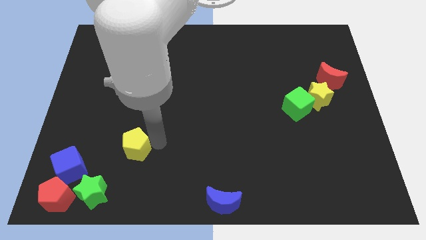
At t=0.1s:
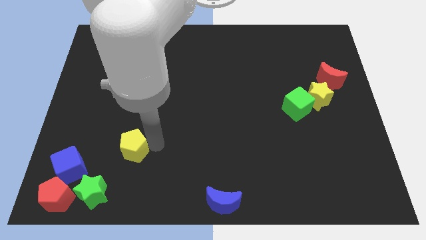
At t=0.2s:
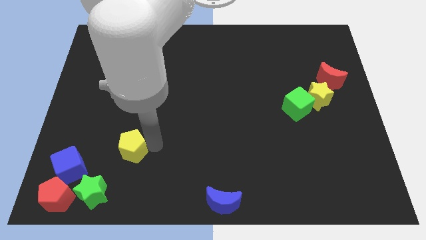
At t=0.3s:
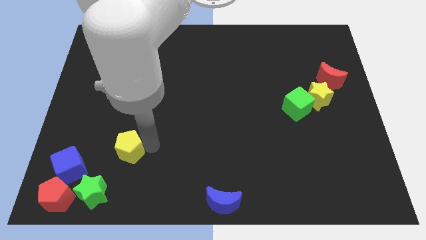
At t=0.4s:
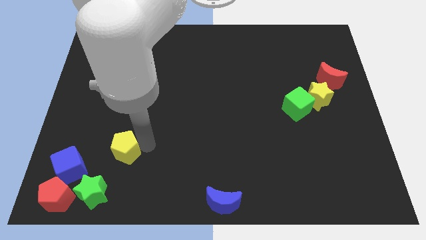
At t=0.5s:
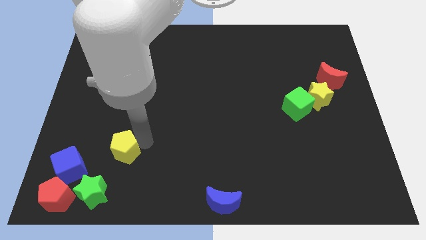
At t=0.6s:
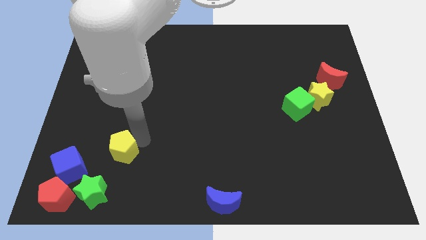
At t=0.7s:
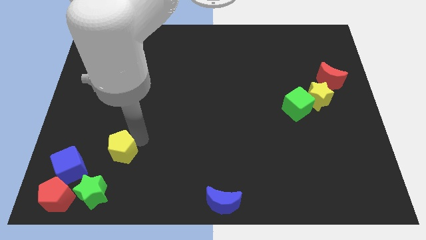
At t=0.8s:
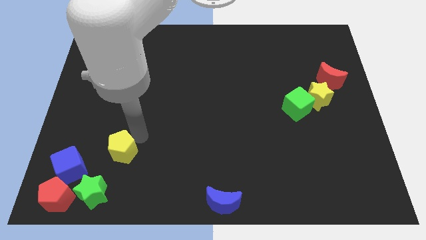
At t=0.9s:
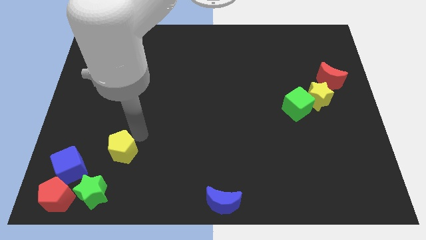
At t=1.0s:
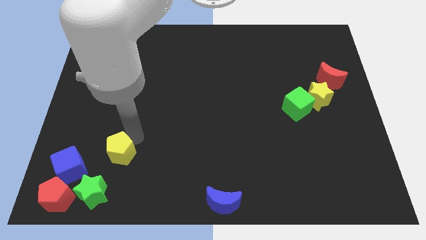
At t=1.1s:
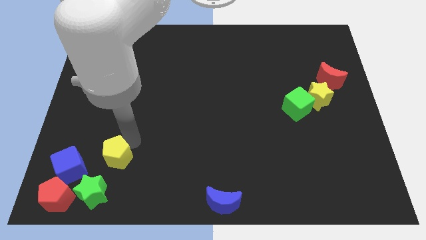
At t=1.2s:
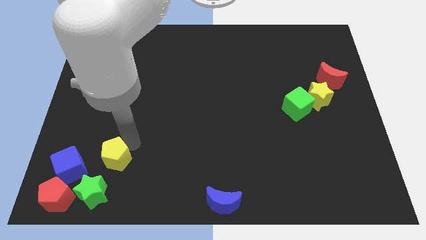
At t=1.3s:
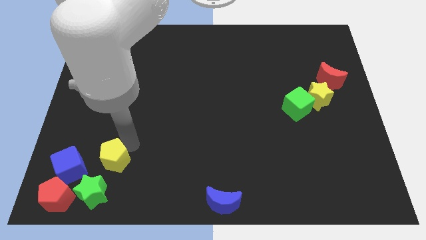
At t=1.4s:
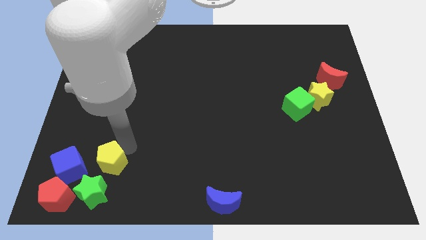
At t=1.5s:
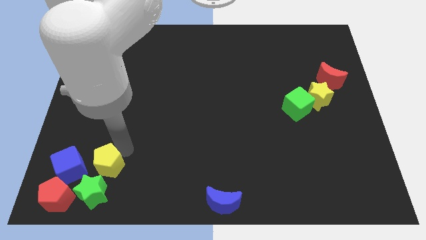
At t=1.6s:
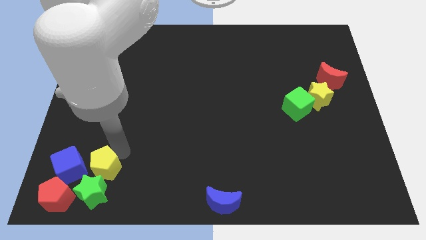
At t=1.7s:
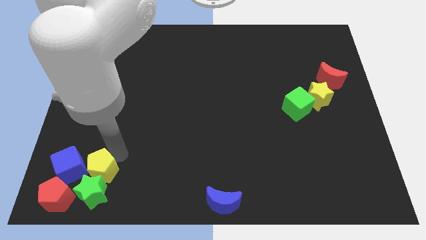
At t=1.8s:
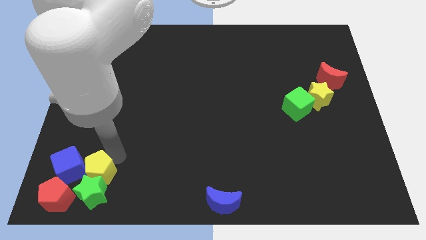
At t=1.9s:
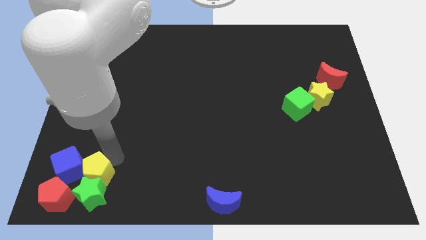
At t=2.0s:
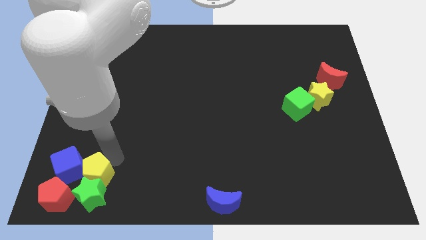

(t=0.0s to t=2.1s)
push the yellow pentagon into the green star

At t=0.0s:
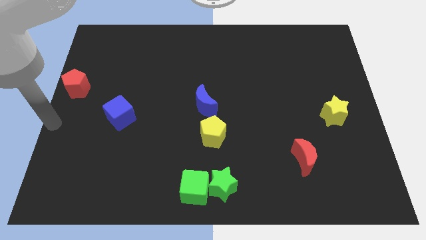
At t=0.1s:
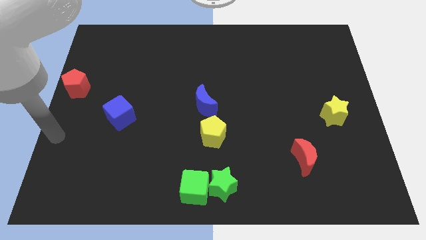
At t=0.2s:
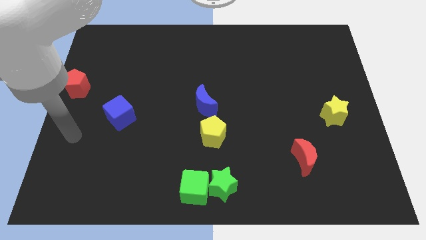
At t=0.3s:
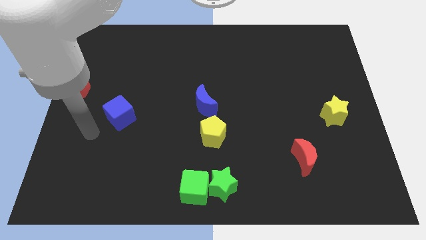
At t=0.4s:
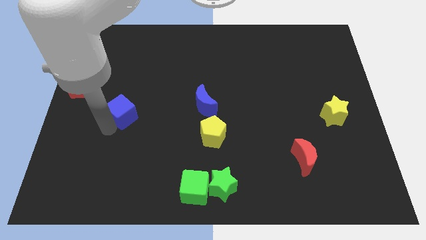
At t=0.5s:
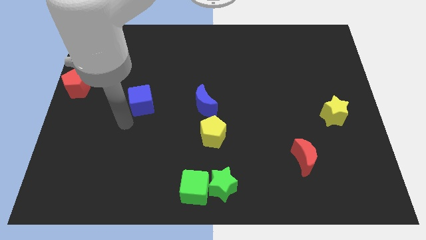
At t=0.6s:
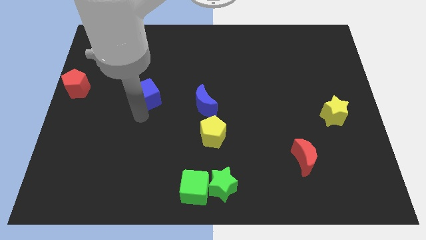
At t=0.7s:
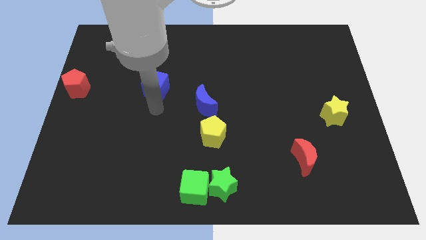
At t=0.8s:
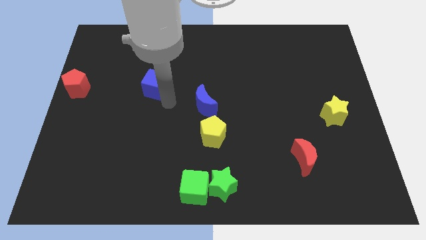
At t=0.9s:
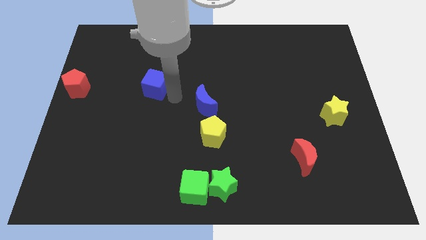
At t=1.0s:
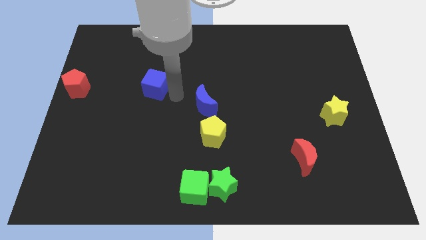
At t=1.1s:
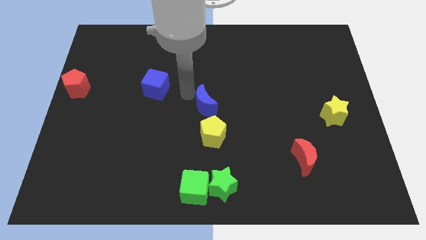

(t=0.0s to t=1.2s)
push the blue cube slightly to the top

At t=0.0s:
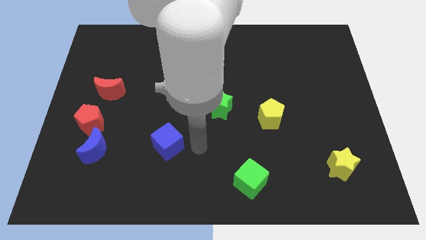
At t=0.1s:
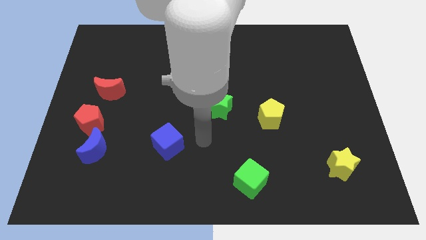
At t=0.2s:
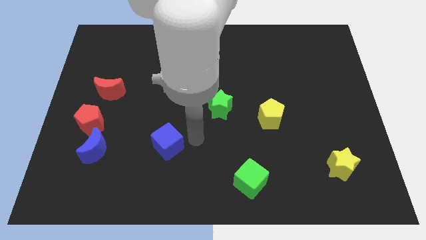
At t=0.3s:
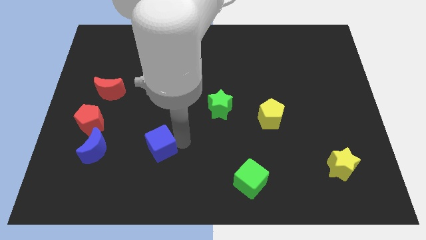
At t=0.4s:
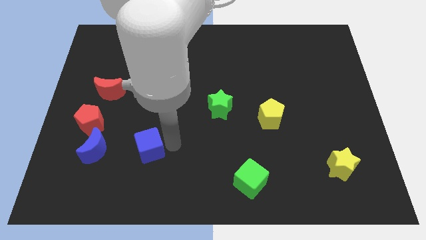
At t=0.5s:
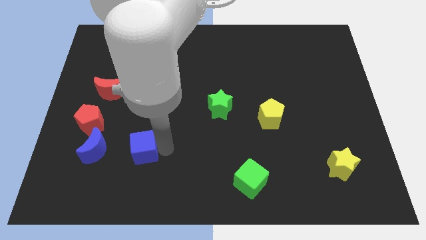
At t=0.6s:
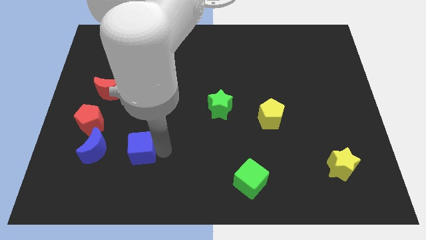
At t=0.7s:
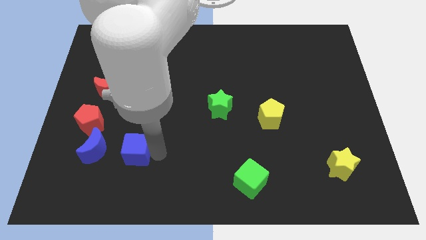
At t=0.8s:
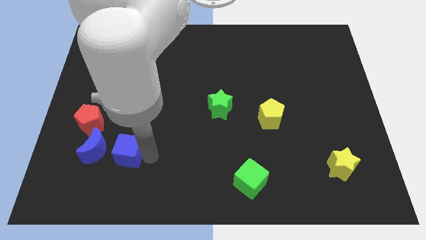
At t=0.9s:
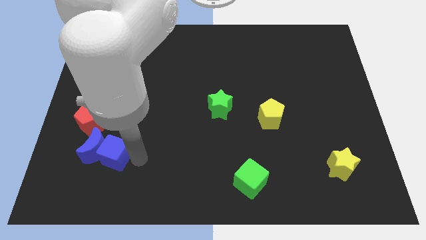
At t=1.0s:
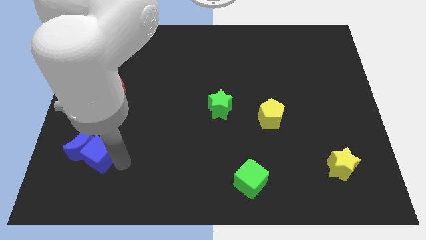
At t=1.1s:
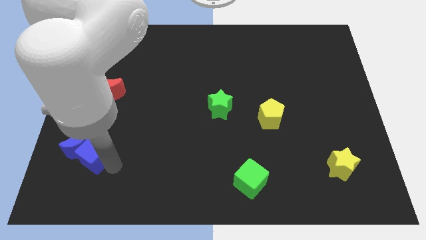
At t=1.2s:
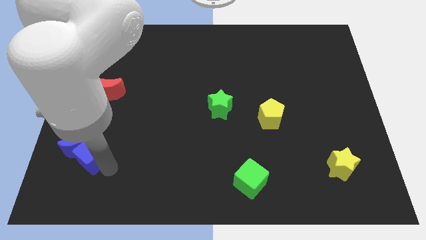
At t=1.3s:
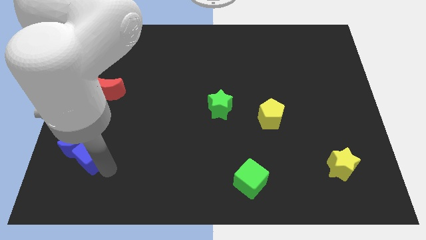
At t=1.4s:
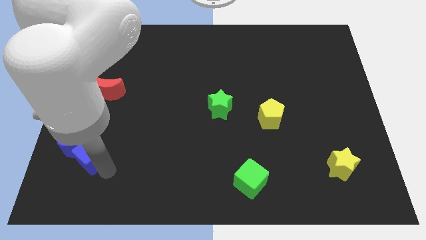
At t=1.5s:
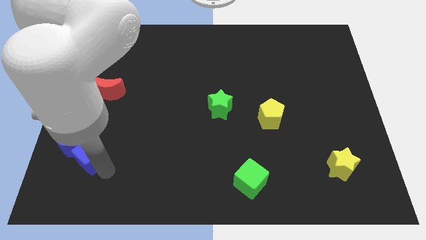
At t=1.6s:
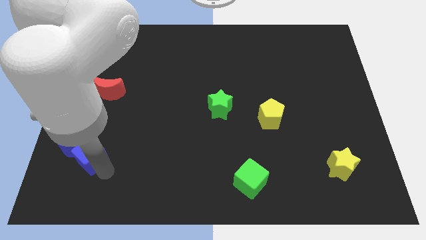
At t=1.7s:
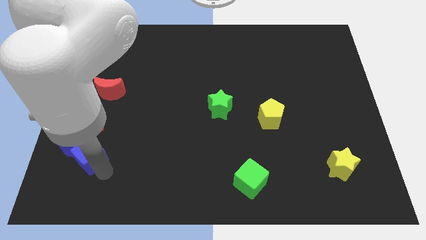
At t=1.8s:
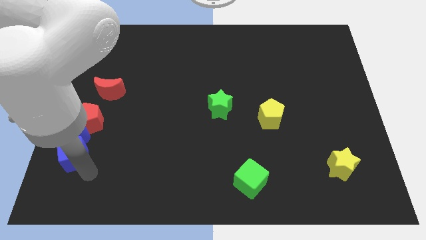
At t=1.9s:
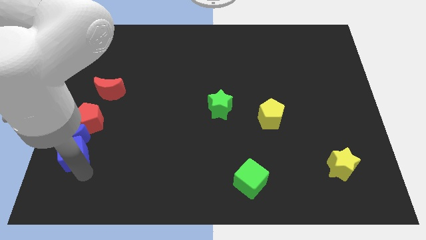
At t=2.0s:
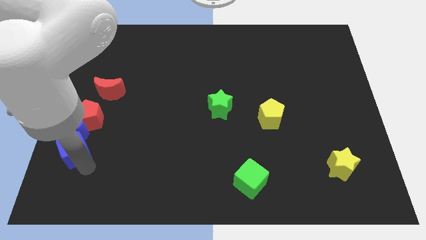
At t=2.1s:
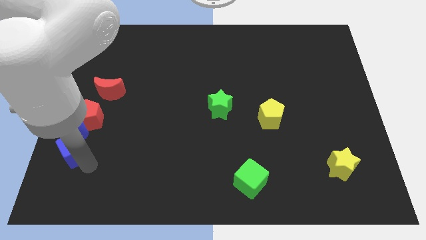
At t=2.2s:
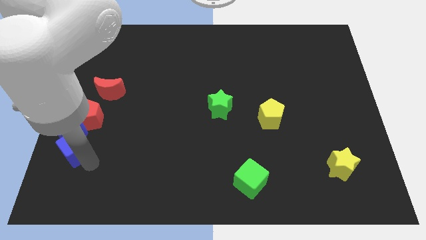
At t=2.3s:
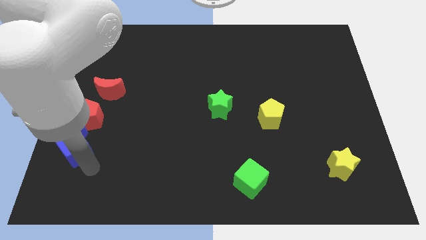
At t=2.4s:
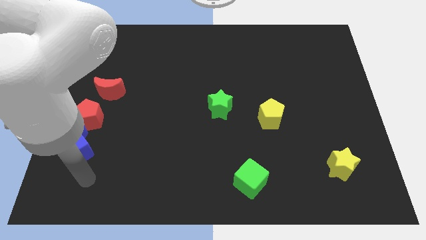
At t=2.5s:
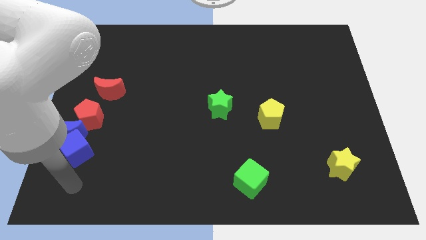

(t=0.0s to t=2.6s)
push the red pentagon with the blue moon

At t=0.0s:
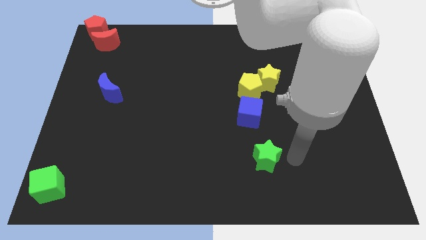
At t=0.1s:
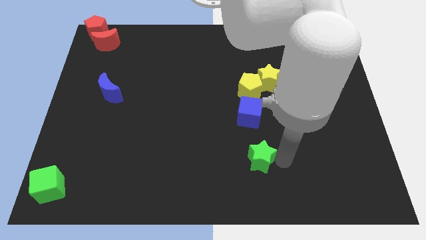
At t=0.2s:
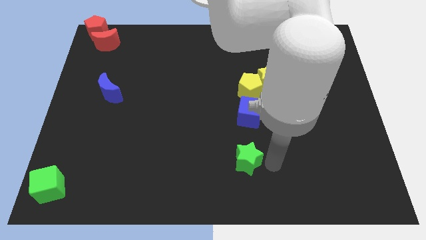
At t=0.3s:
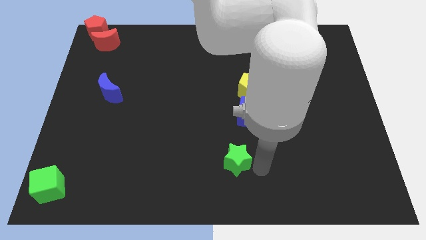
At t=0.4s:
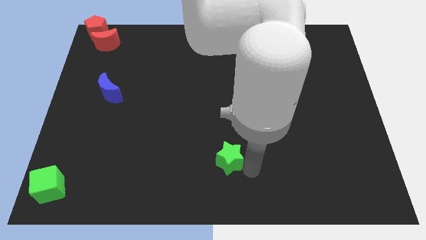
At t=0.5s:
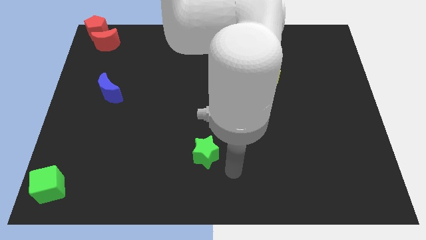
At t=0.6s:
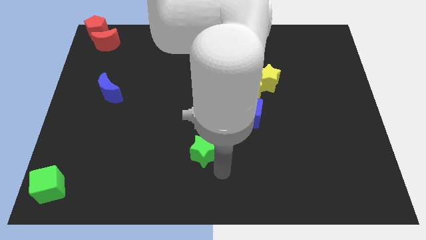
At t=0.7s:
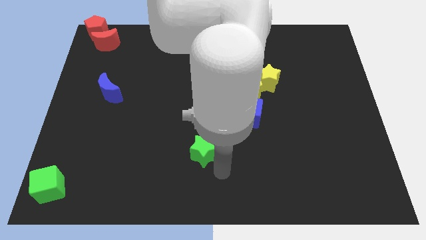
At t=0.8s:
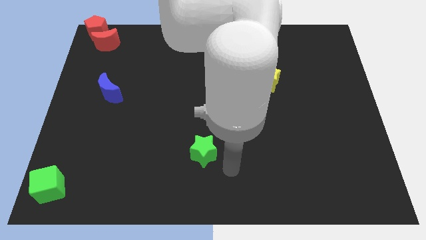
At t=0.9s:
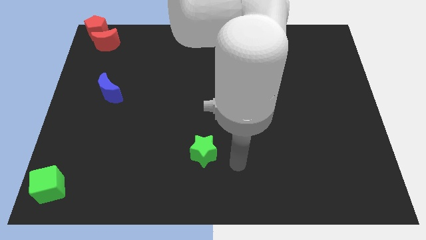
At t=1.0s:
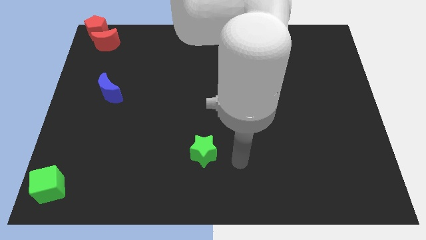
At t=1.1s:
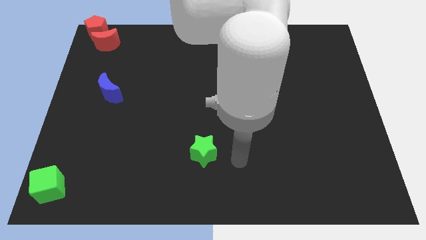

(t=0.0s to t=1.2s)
push the green star to the left of the board

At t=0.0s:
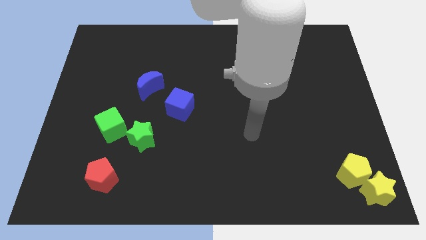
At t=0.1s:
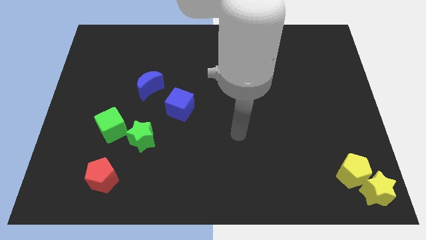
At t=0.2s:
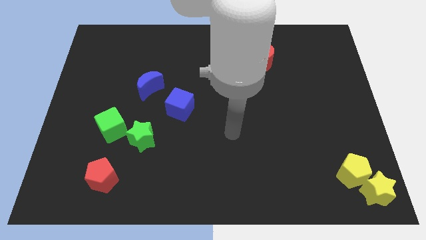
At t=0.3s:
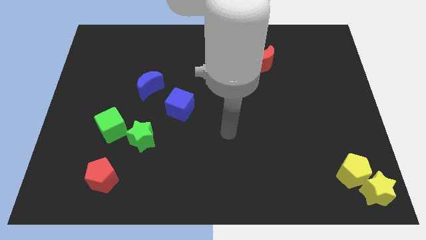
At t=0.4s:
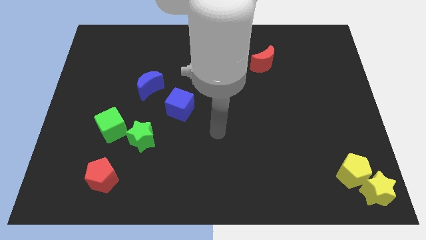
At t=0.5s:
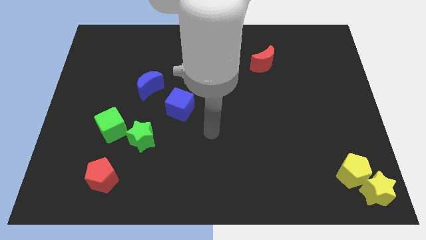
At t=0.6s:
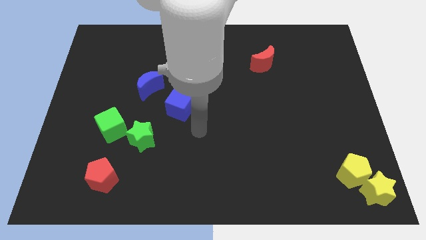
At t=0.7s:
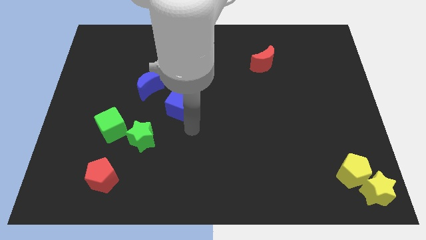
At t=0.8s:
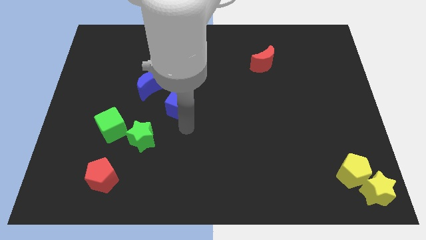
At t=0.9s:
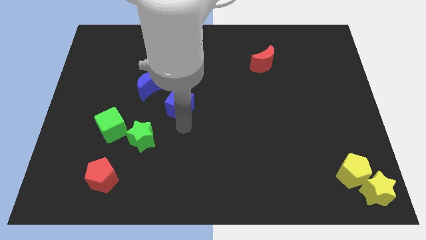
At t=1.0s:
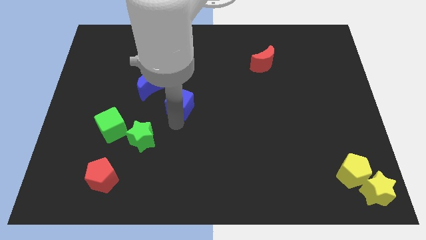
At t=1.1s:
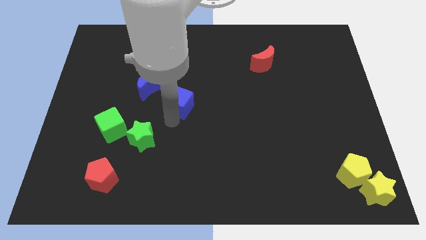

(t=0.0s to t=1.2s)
point your arm below blue cube

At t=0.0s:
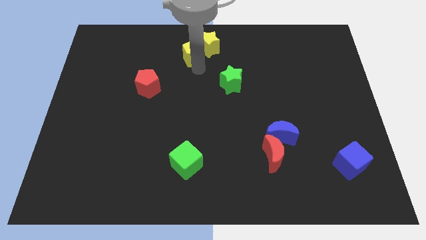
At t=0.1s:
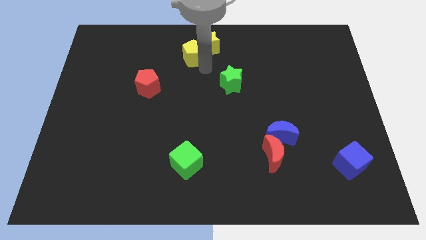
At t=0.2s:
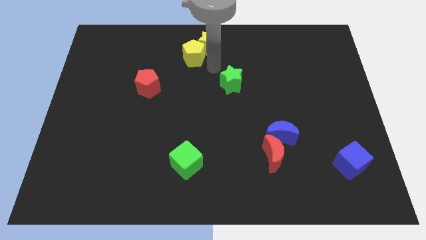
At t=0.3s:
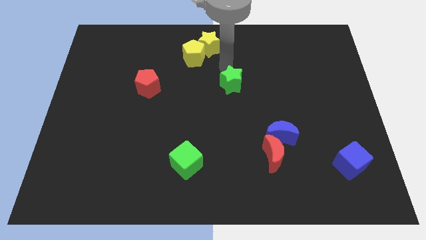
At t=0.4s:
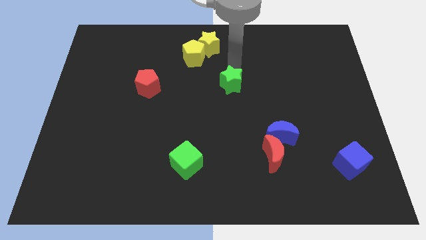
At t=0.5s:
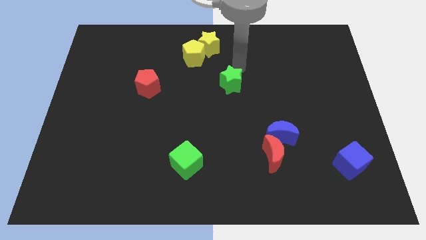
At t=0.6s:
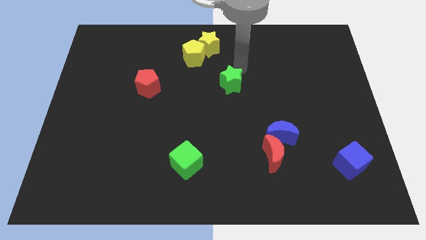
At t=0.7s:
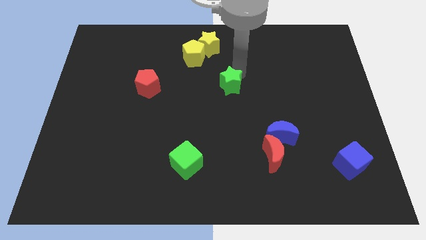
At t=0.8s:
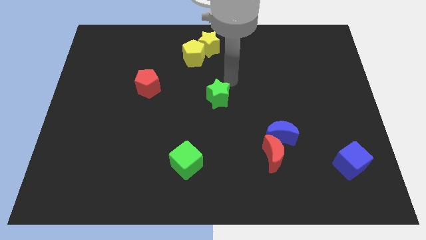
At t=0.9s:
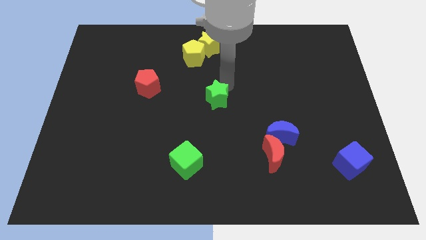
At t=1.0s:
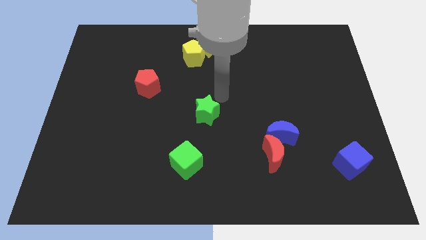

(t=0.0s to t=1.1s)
slide green star downwards
